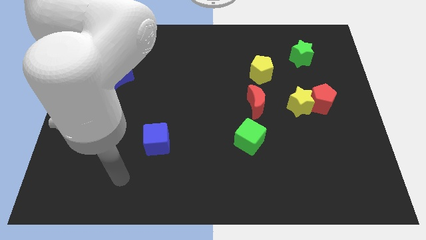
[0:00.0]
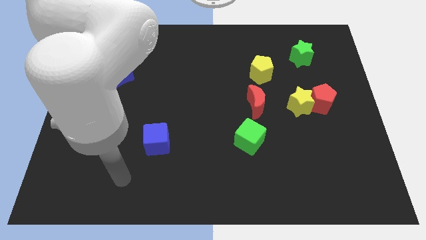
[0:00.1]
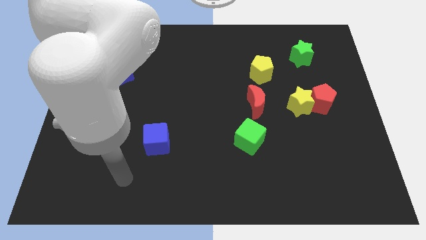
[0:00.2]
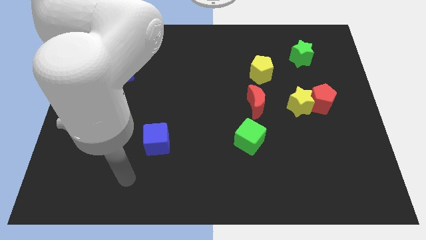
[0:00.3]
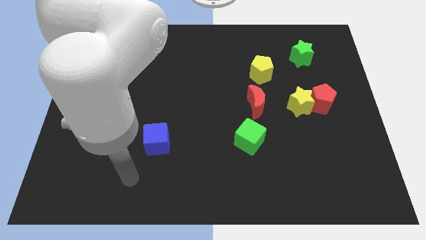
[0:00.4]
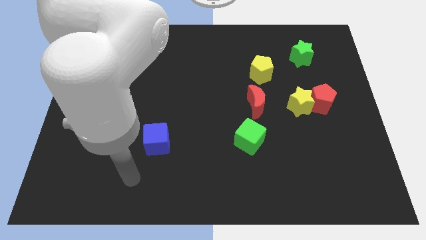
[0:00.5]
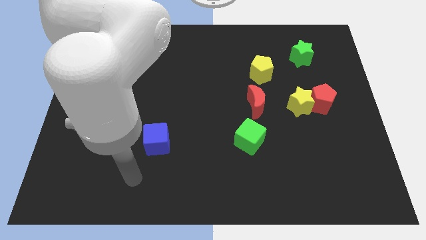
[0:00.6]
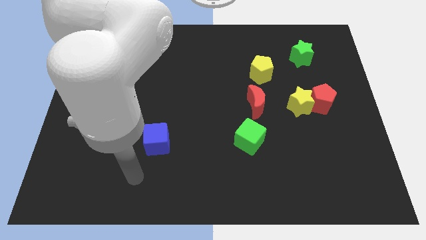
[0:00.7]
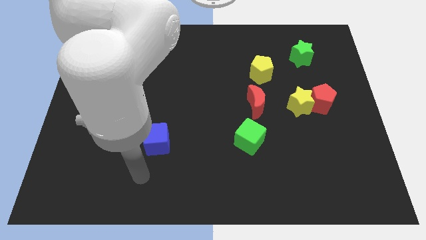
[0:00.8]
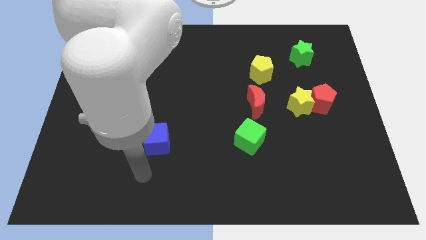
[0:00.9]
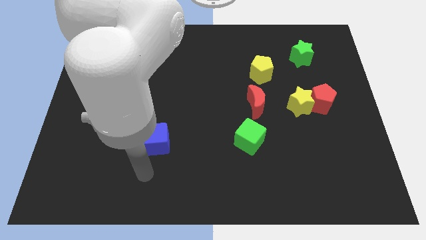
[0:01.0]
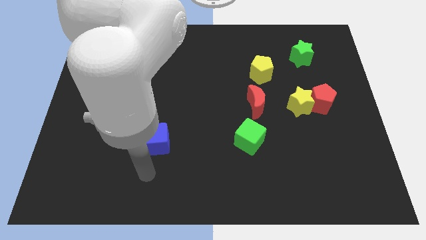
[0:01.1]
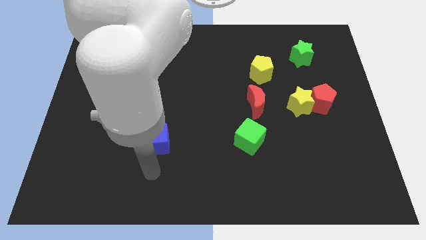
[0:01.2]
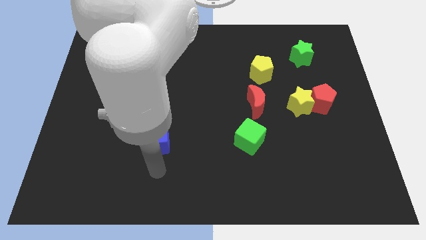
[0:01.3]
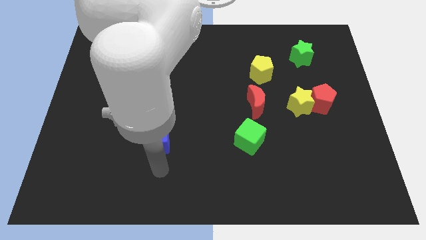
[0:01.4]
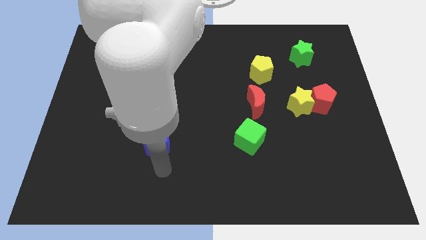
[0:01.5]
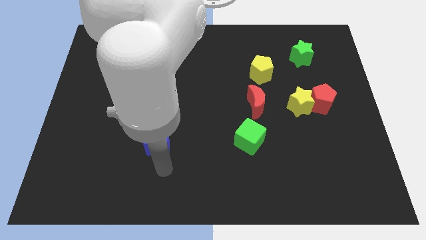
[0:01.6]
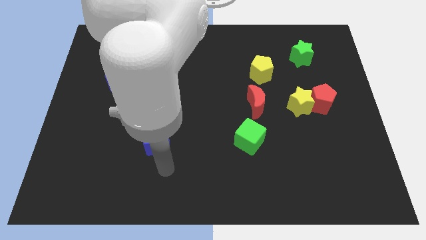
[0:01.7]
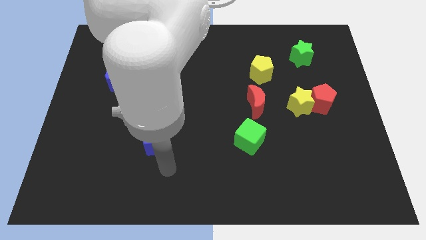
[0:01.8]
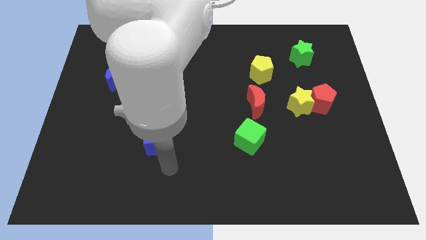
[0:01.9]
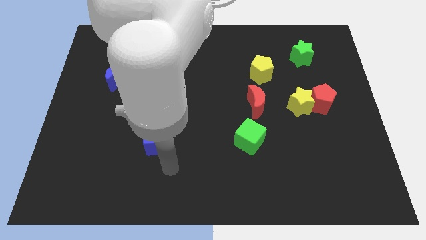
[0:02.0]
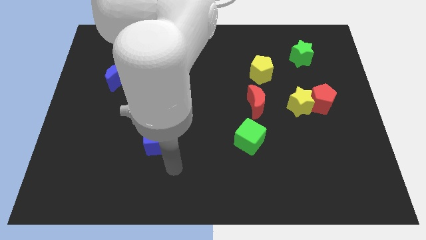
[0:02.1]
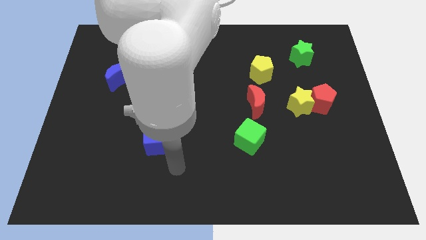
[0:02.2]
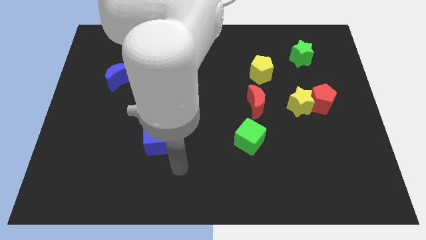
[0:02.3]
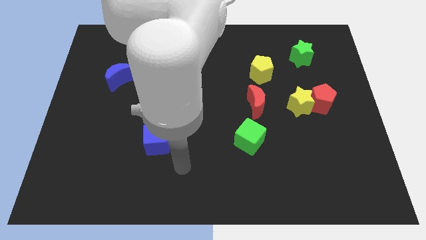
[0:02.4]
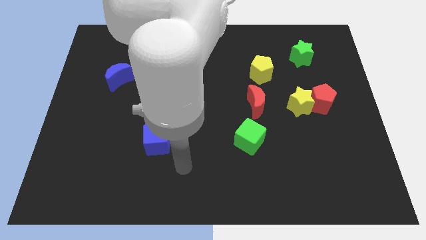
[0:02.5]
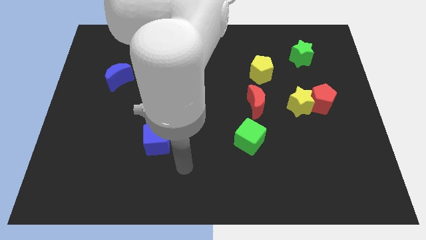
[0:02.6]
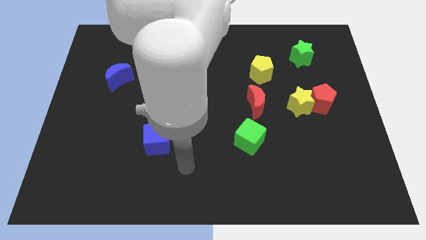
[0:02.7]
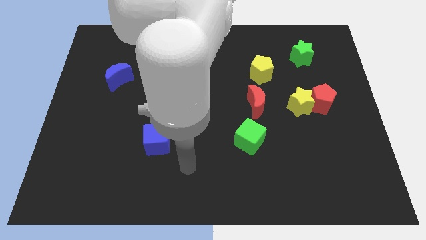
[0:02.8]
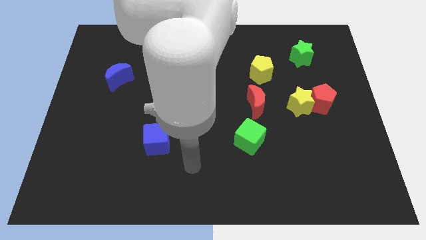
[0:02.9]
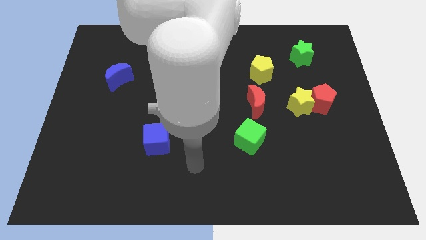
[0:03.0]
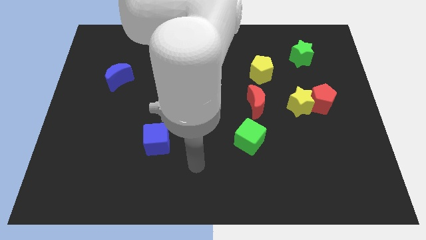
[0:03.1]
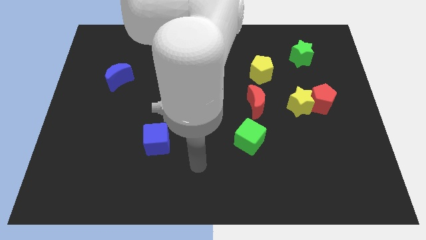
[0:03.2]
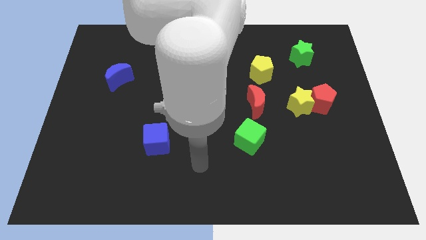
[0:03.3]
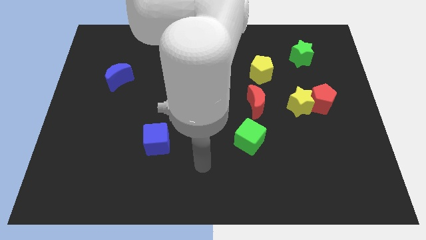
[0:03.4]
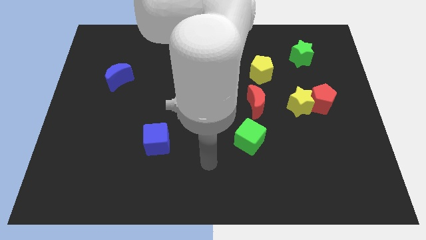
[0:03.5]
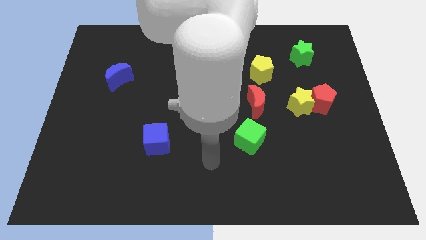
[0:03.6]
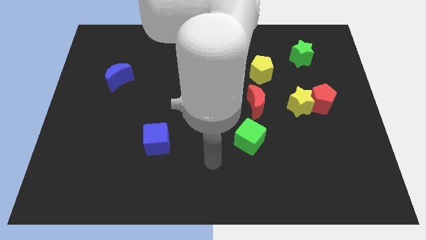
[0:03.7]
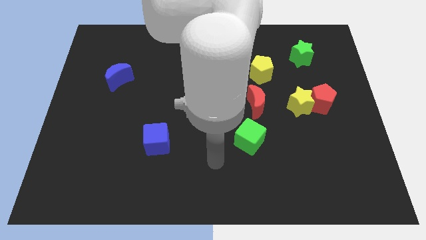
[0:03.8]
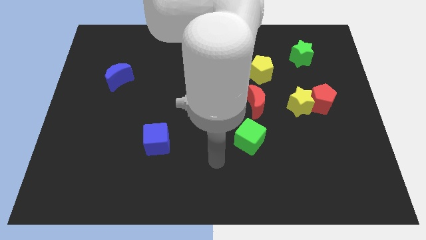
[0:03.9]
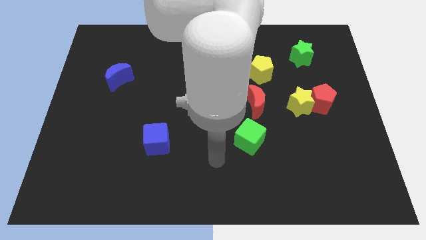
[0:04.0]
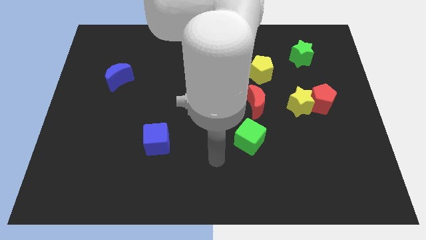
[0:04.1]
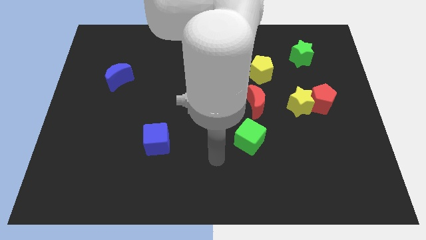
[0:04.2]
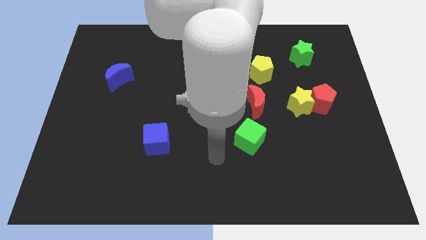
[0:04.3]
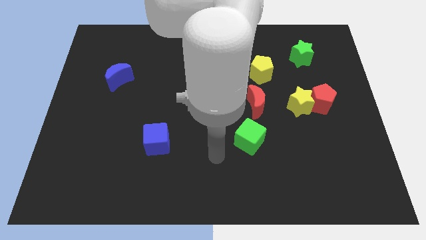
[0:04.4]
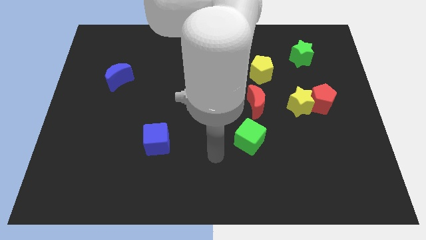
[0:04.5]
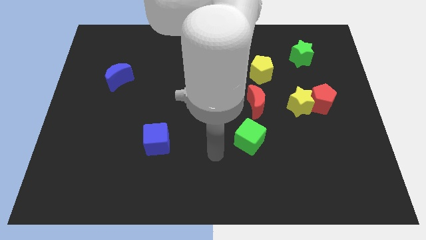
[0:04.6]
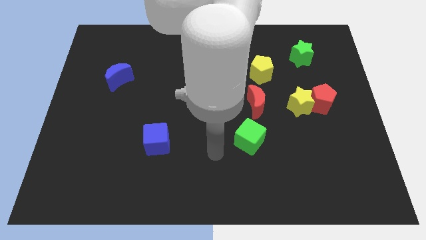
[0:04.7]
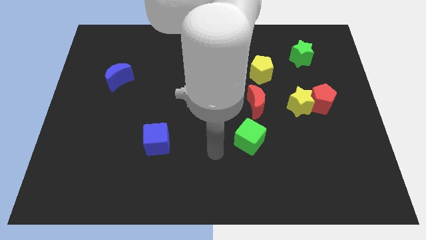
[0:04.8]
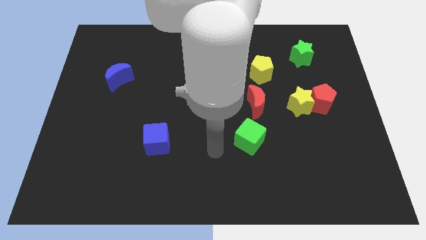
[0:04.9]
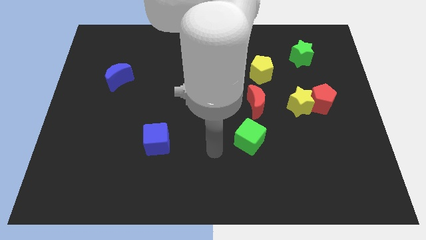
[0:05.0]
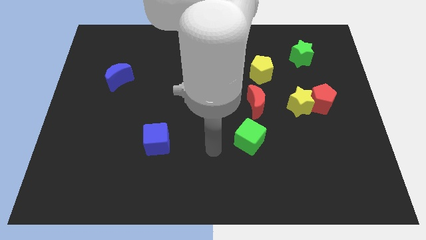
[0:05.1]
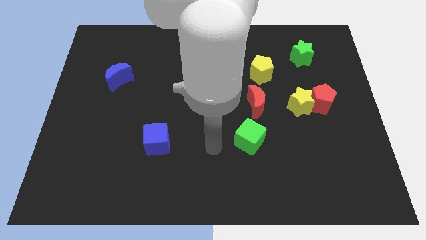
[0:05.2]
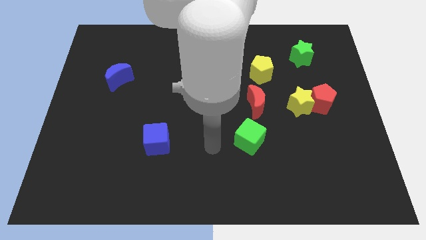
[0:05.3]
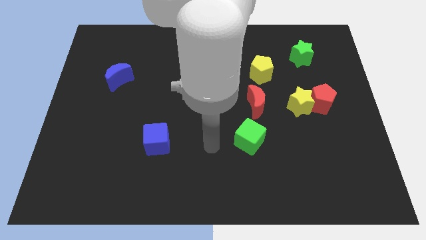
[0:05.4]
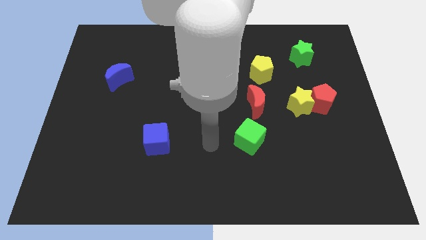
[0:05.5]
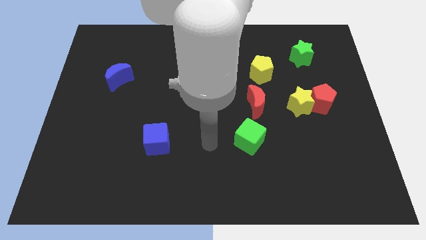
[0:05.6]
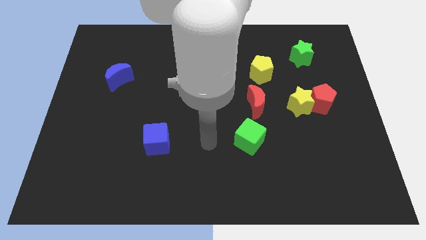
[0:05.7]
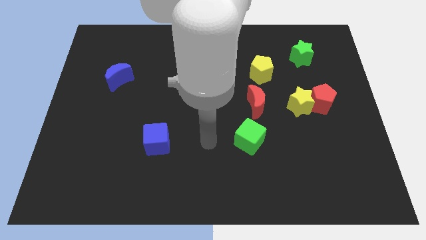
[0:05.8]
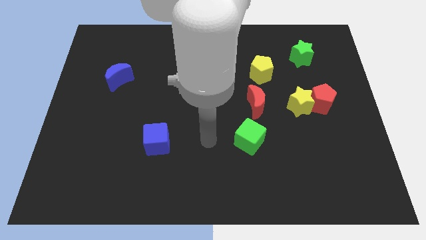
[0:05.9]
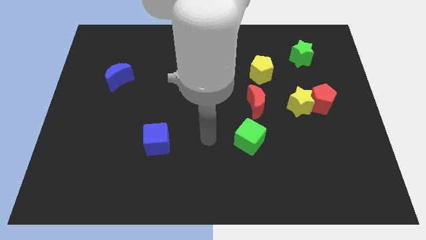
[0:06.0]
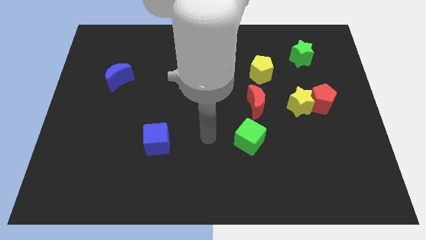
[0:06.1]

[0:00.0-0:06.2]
go and point your hand in between the blue cube and the green cube

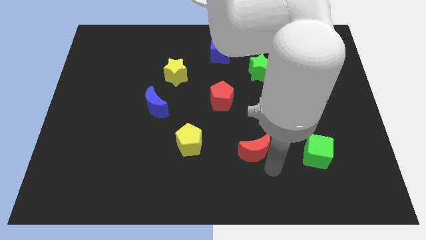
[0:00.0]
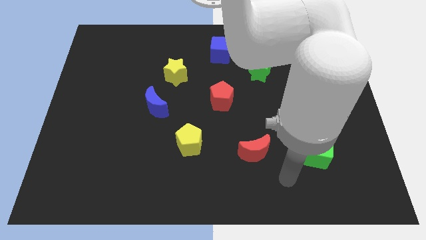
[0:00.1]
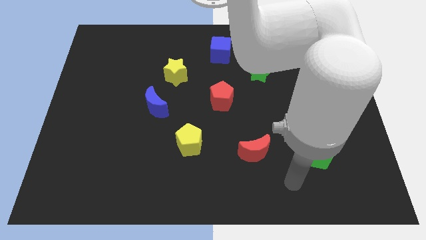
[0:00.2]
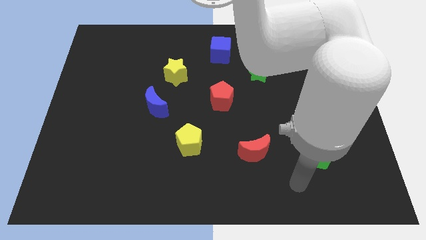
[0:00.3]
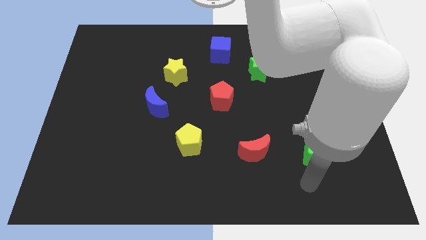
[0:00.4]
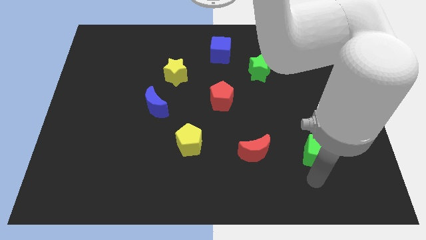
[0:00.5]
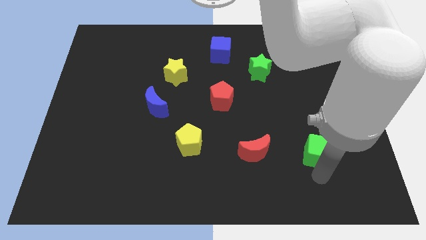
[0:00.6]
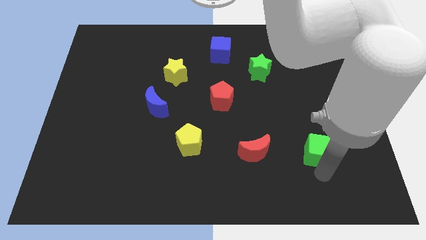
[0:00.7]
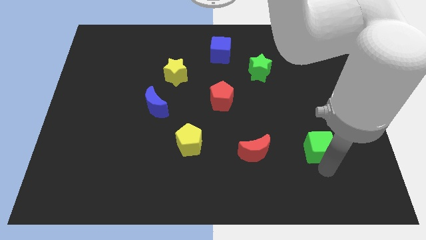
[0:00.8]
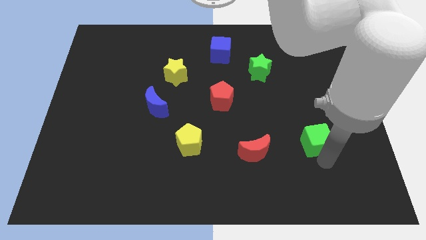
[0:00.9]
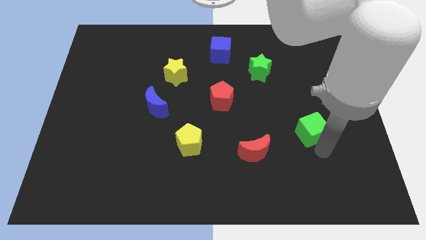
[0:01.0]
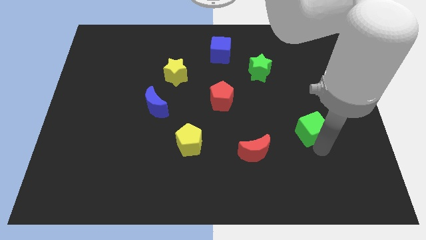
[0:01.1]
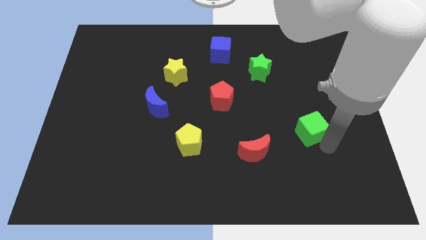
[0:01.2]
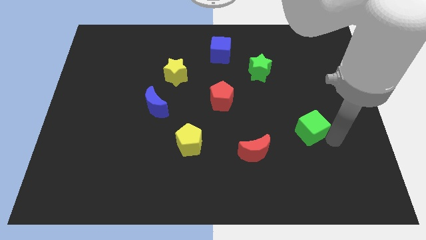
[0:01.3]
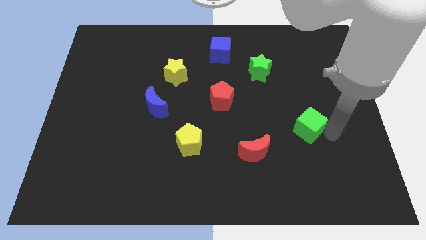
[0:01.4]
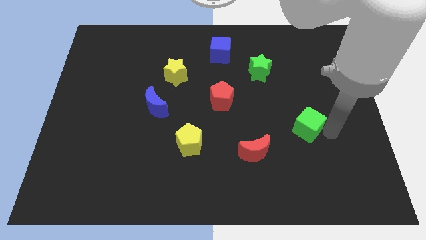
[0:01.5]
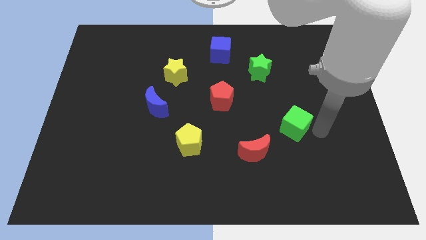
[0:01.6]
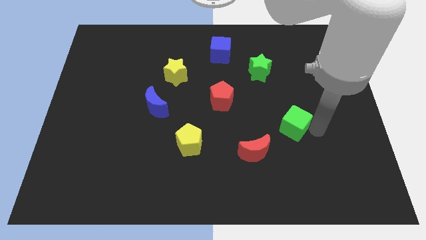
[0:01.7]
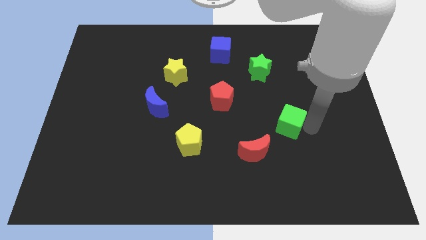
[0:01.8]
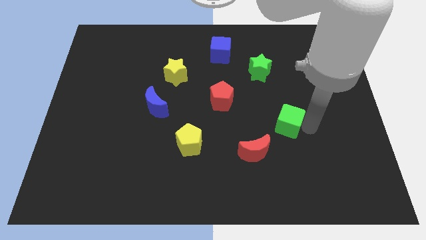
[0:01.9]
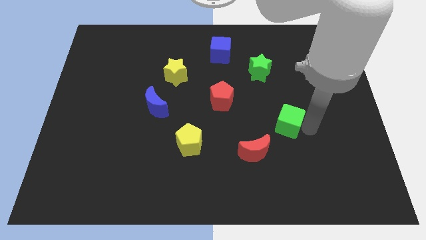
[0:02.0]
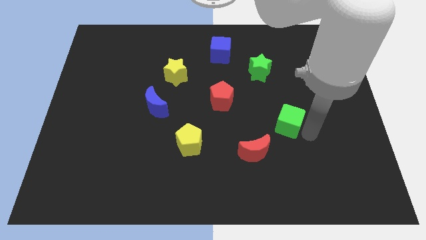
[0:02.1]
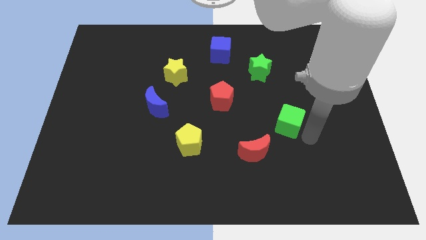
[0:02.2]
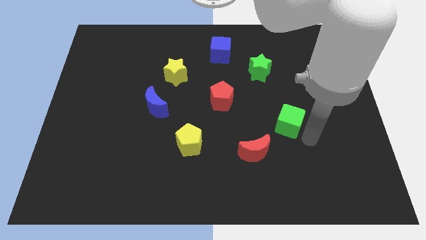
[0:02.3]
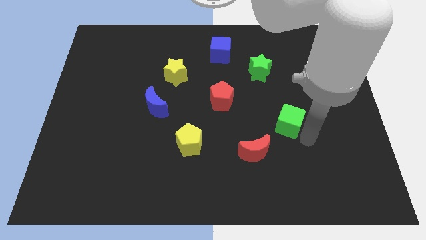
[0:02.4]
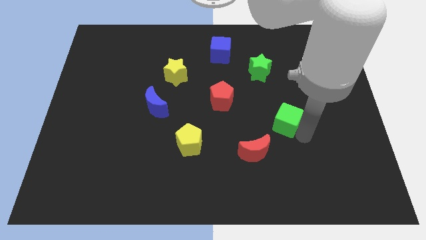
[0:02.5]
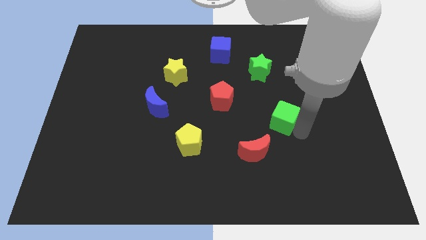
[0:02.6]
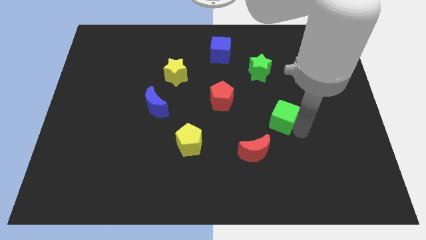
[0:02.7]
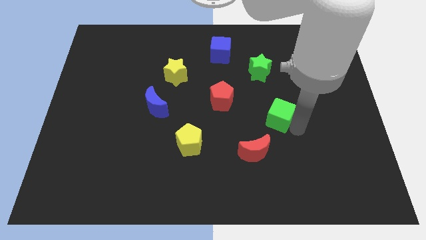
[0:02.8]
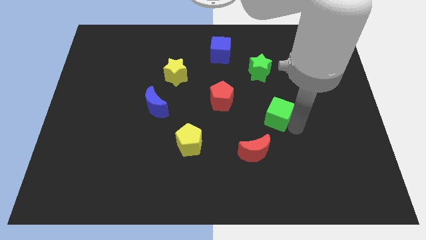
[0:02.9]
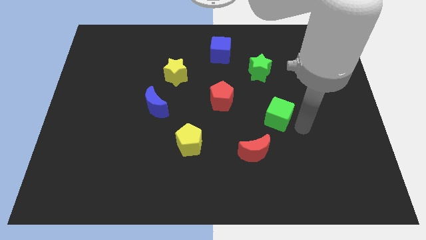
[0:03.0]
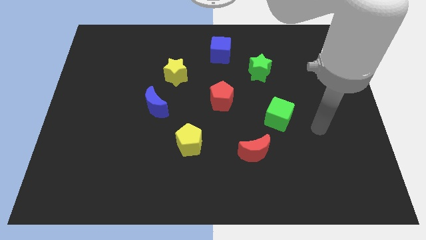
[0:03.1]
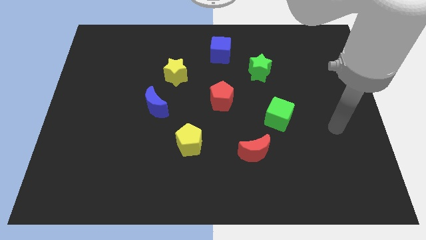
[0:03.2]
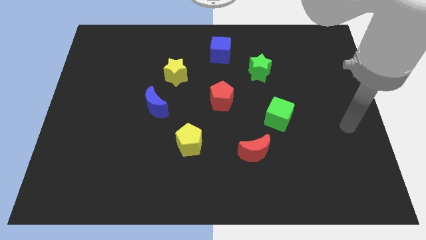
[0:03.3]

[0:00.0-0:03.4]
move the green cube towards the center of the board
